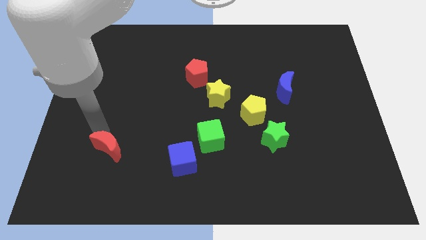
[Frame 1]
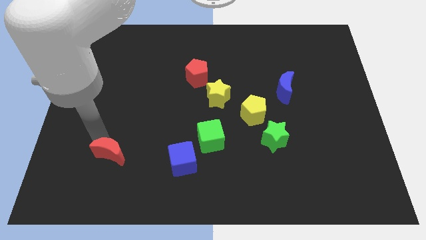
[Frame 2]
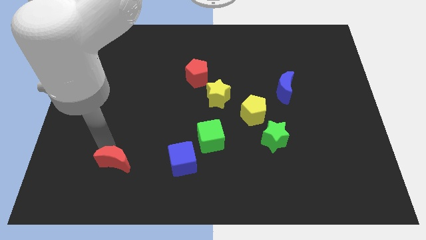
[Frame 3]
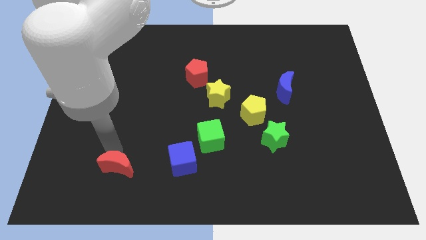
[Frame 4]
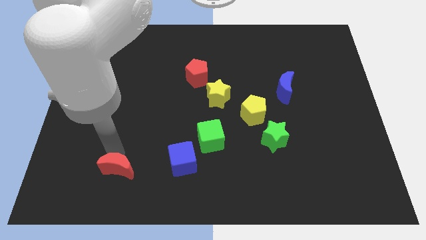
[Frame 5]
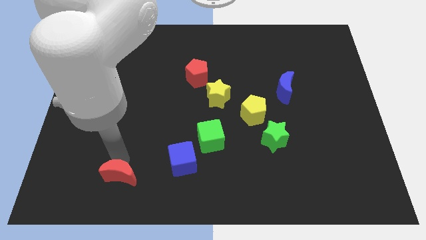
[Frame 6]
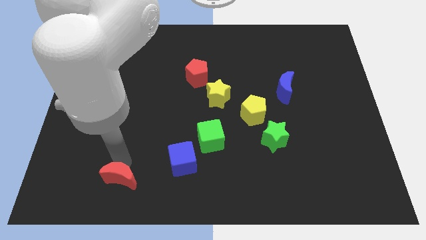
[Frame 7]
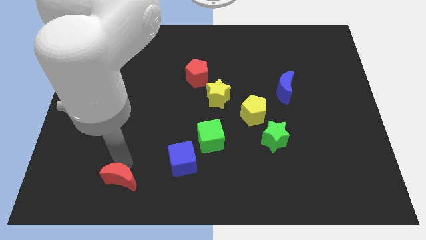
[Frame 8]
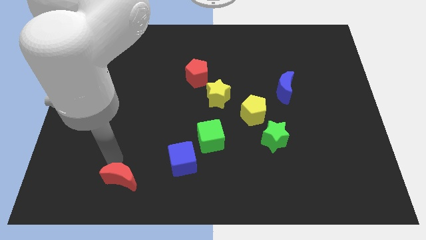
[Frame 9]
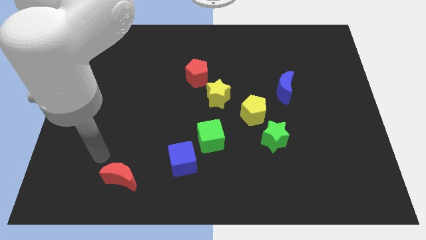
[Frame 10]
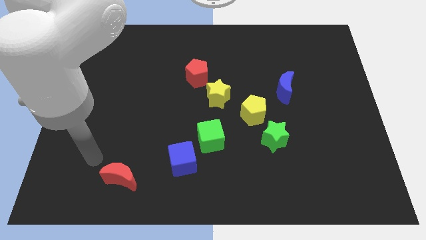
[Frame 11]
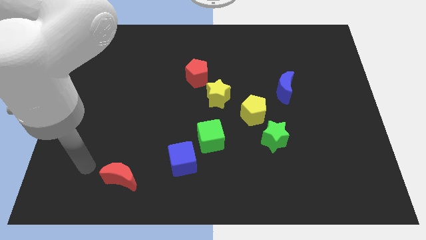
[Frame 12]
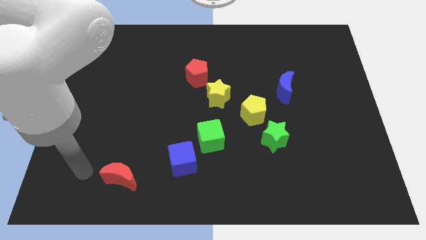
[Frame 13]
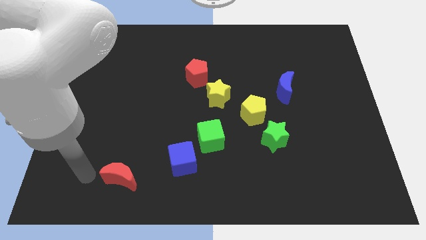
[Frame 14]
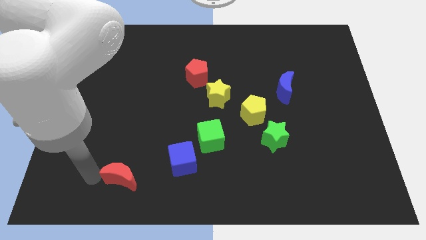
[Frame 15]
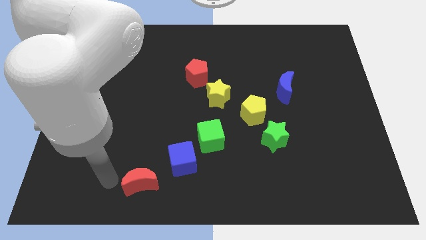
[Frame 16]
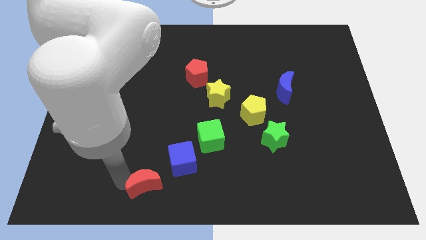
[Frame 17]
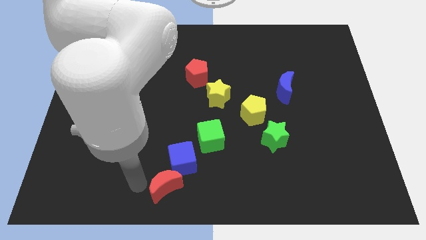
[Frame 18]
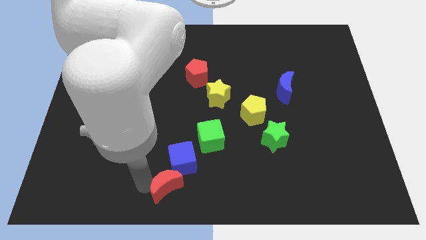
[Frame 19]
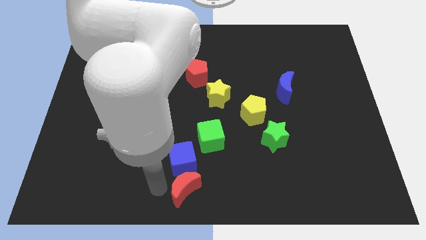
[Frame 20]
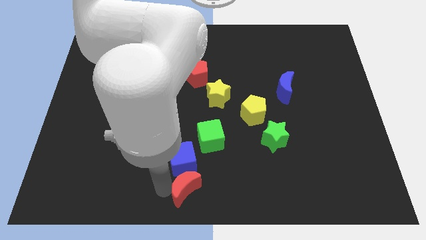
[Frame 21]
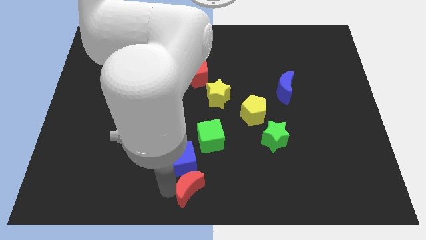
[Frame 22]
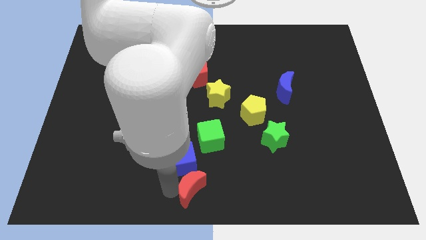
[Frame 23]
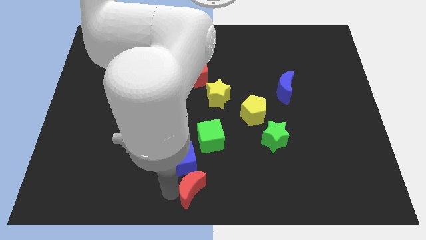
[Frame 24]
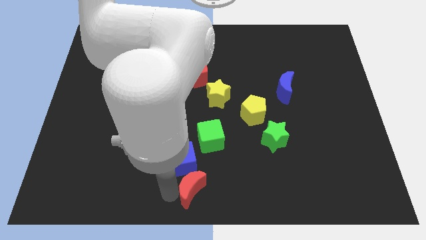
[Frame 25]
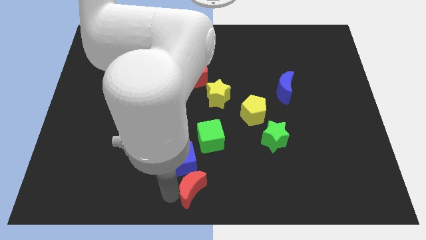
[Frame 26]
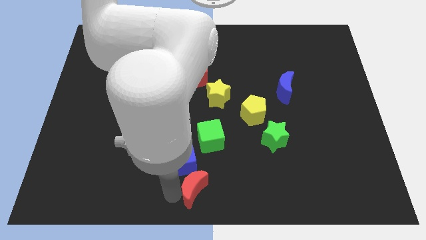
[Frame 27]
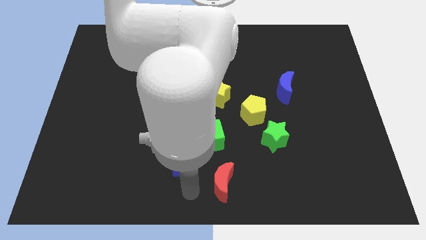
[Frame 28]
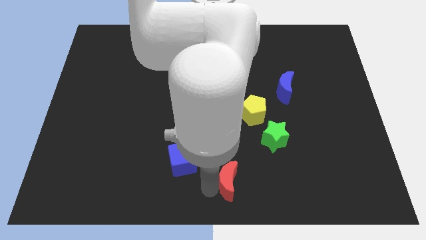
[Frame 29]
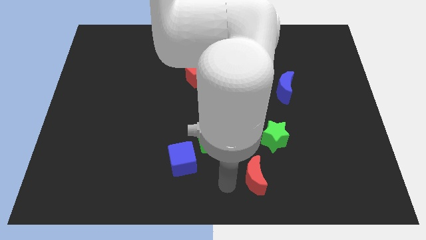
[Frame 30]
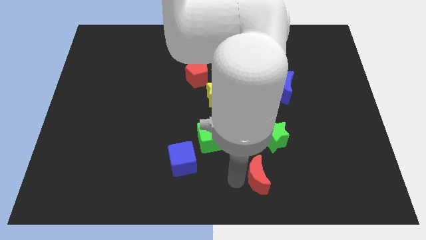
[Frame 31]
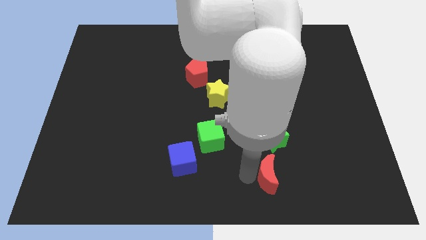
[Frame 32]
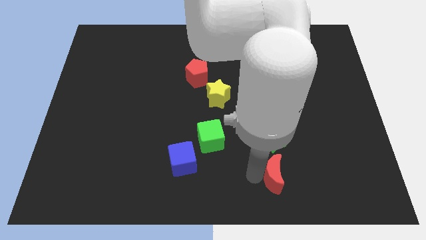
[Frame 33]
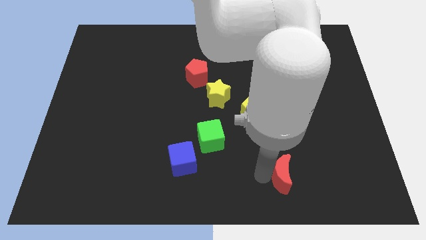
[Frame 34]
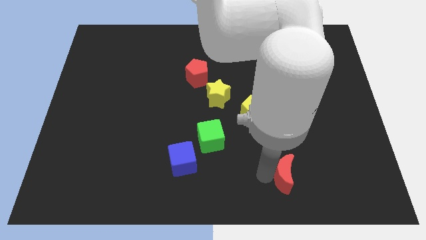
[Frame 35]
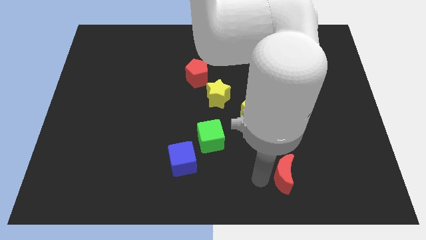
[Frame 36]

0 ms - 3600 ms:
place the red moon below the green star

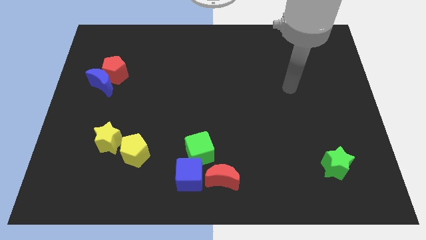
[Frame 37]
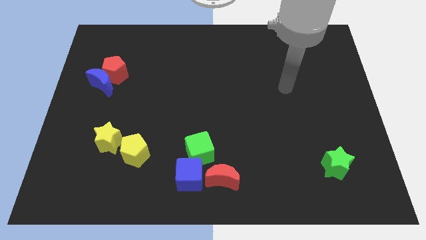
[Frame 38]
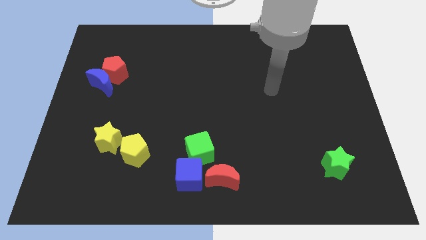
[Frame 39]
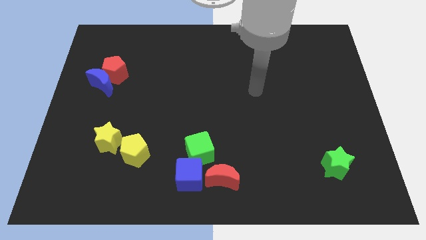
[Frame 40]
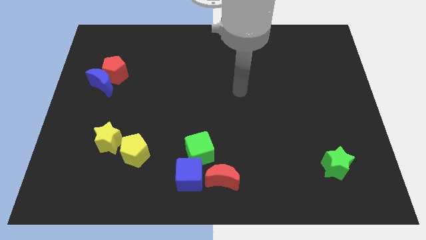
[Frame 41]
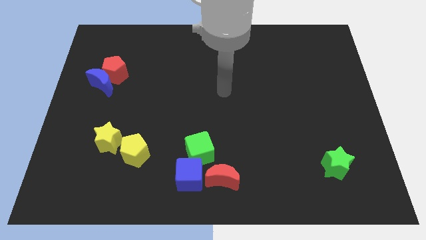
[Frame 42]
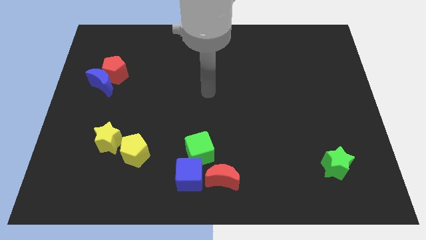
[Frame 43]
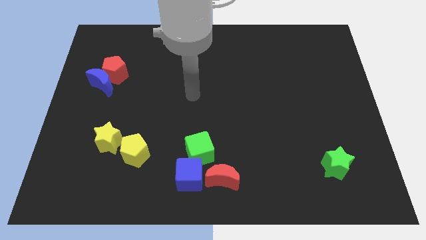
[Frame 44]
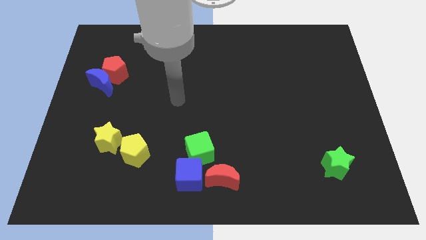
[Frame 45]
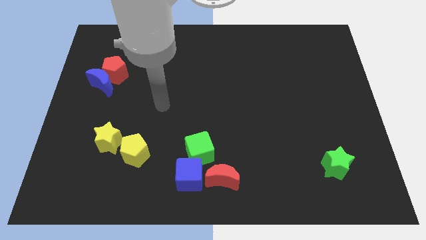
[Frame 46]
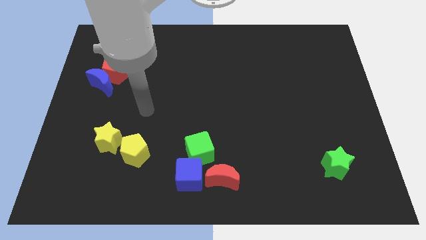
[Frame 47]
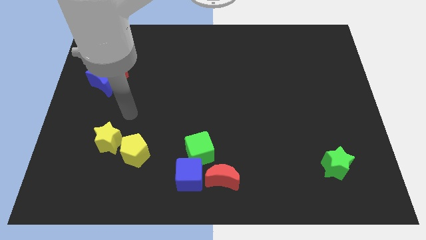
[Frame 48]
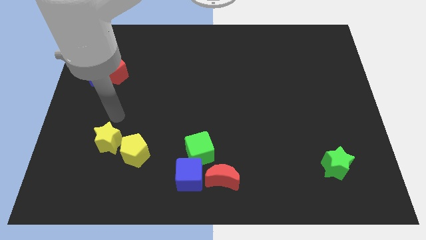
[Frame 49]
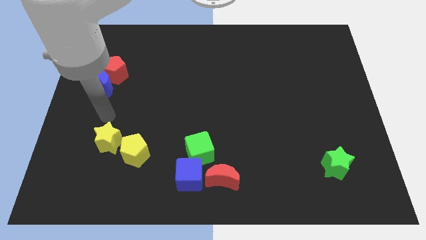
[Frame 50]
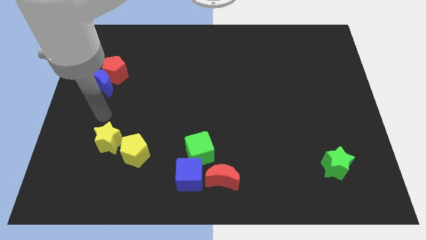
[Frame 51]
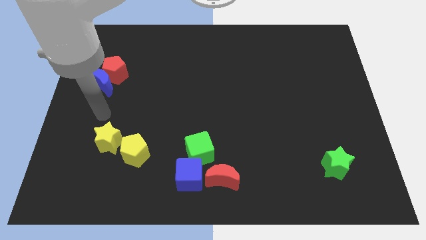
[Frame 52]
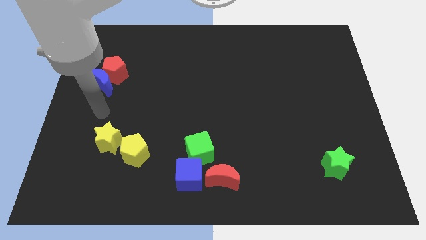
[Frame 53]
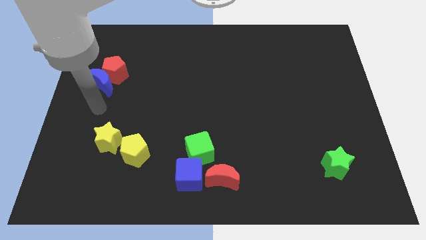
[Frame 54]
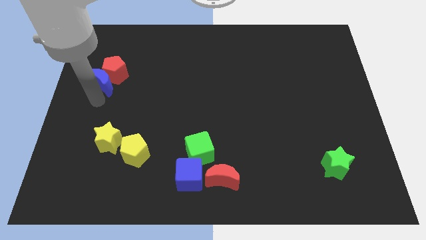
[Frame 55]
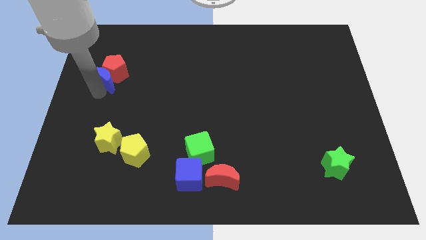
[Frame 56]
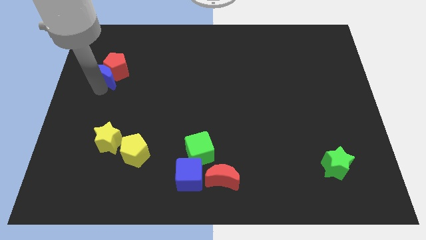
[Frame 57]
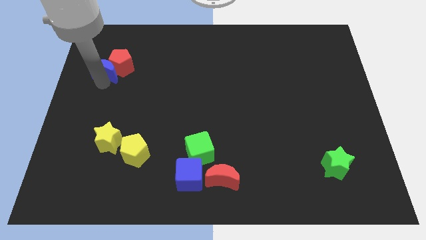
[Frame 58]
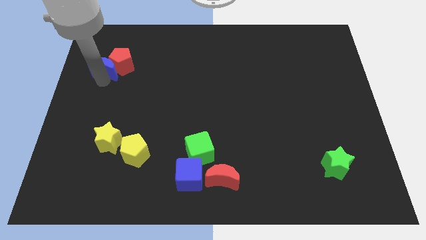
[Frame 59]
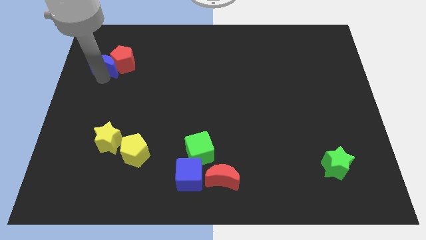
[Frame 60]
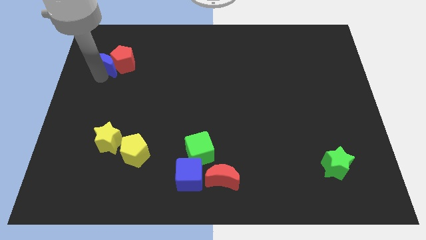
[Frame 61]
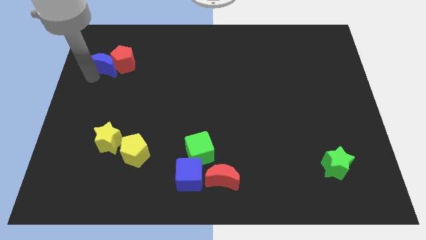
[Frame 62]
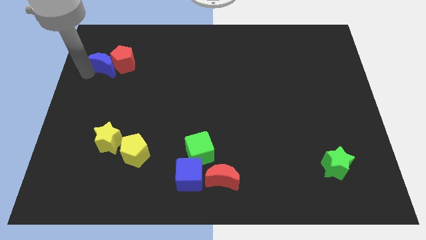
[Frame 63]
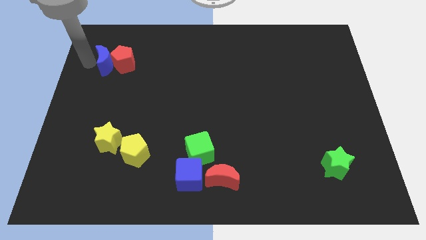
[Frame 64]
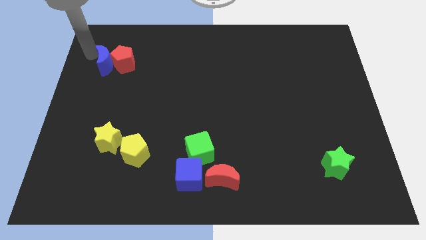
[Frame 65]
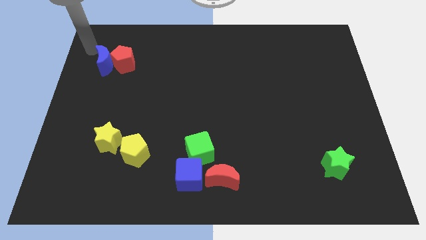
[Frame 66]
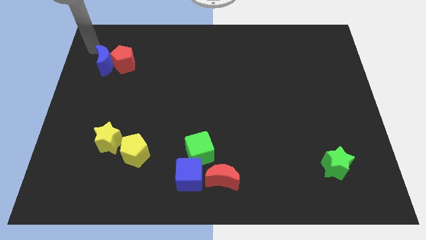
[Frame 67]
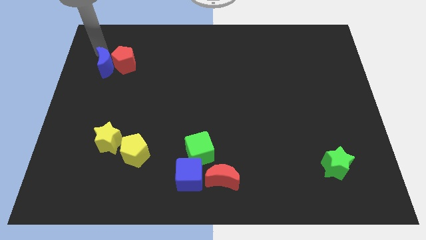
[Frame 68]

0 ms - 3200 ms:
move blue crescent along with red pentagon to the left top

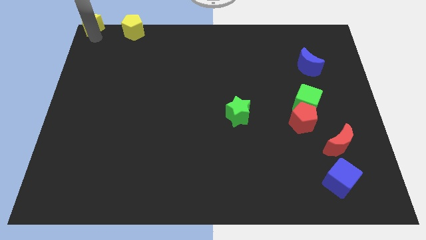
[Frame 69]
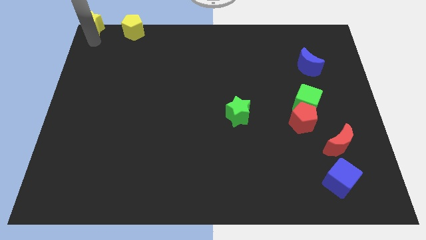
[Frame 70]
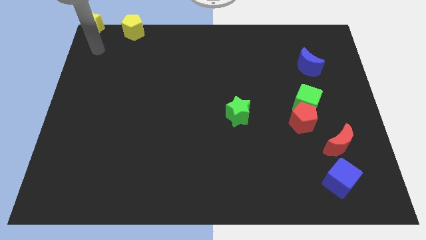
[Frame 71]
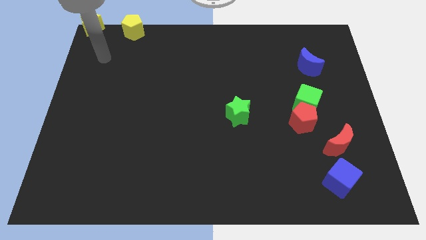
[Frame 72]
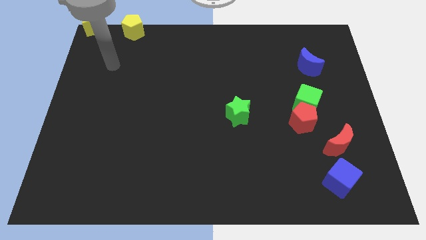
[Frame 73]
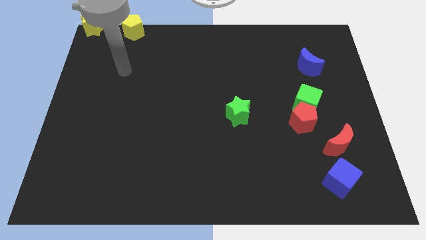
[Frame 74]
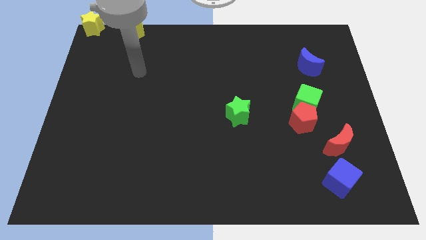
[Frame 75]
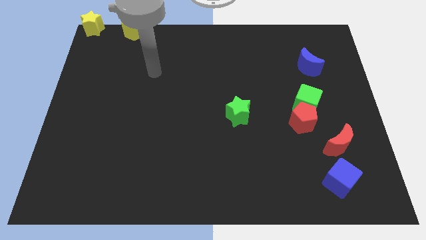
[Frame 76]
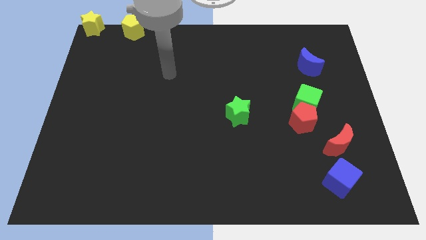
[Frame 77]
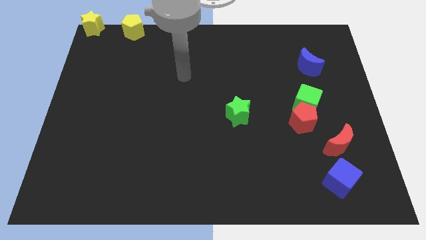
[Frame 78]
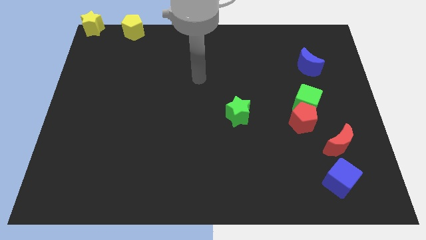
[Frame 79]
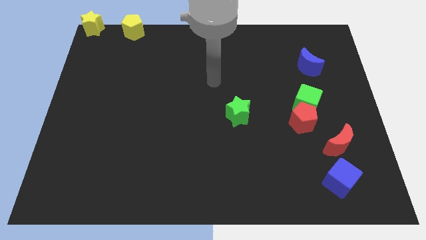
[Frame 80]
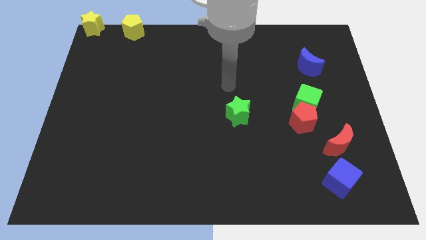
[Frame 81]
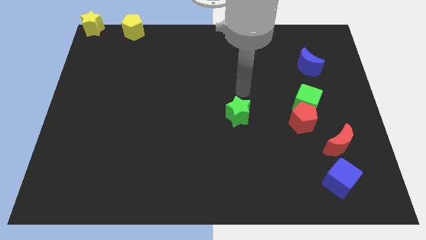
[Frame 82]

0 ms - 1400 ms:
place the arm above the green star

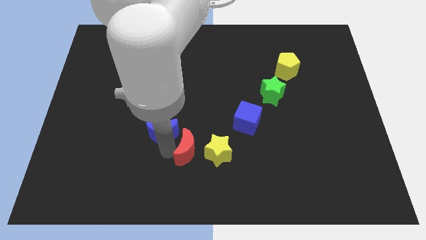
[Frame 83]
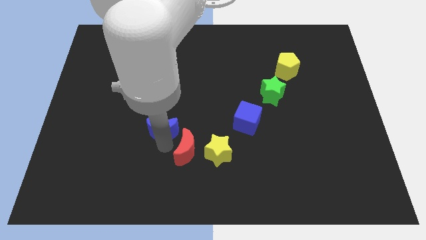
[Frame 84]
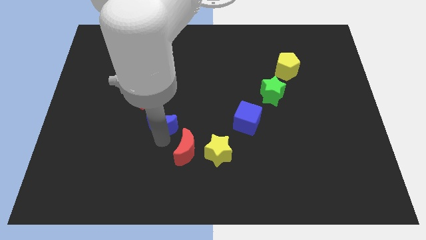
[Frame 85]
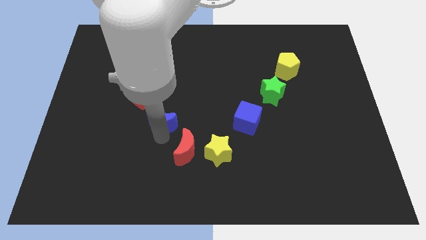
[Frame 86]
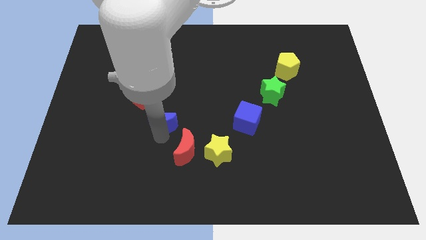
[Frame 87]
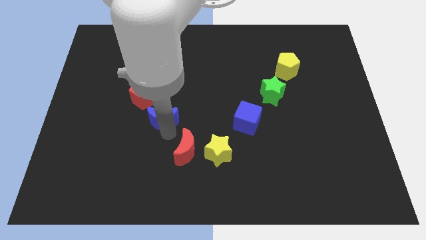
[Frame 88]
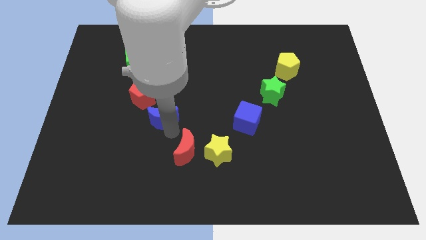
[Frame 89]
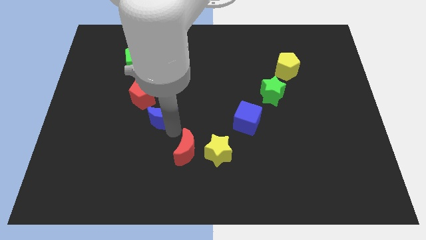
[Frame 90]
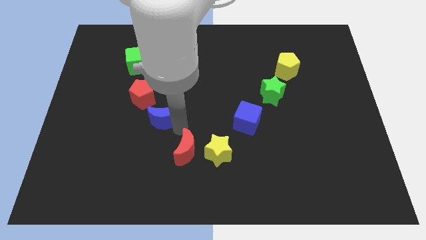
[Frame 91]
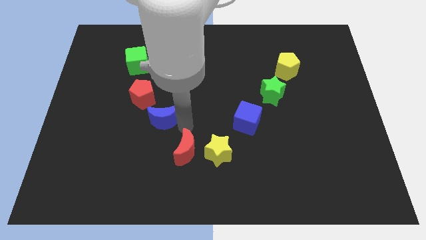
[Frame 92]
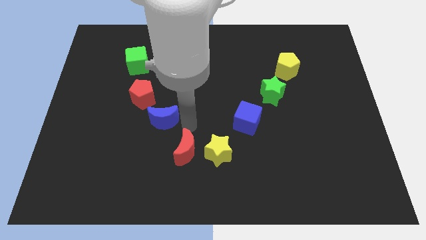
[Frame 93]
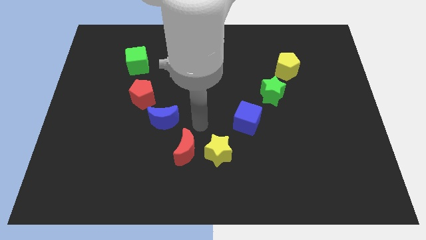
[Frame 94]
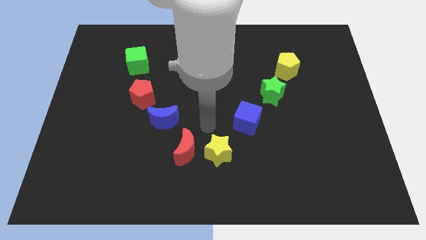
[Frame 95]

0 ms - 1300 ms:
move the blue crescent to the bottom right side of the red pentagon
